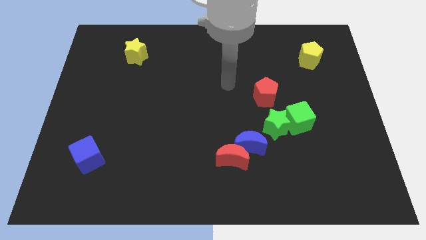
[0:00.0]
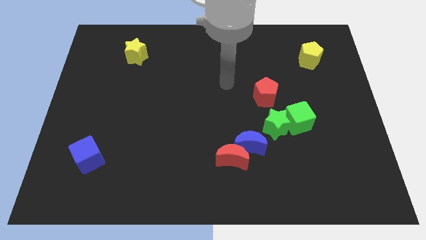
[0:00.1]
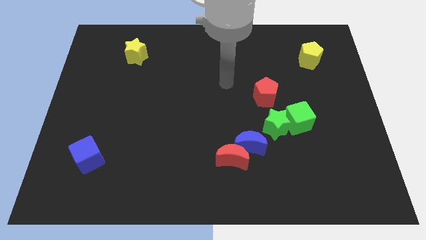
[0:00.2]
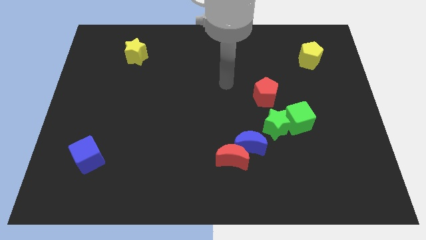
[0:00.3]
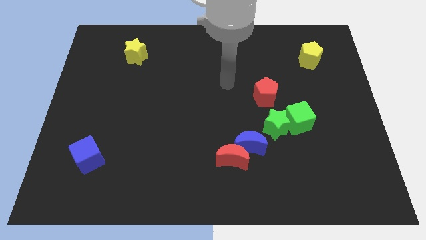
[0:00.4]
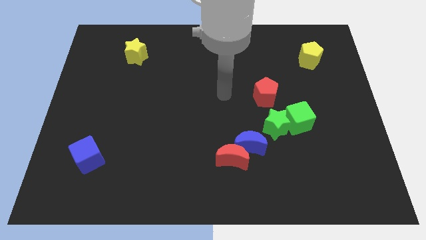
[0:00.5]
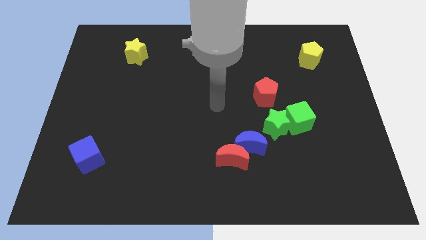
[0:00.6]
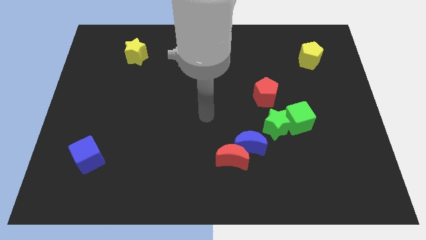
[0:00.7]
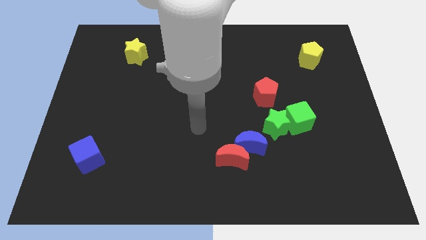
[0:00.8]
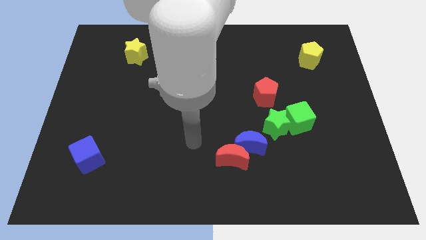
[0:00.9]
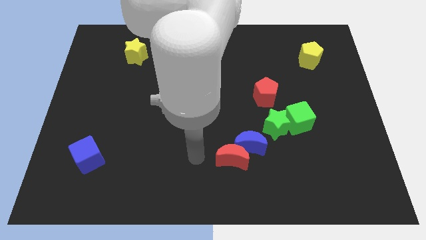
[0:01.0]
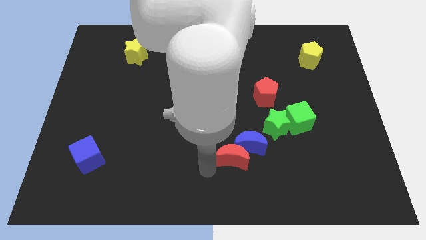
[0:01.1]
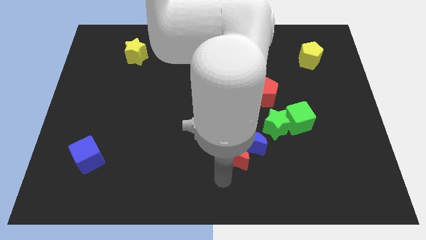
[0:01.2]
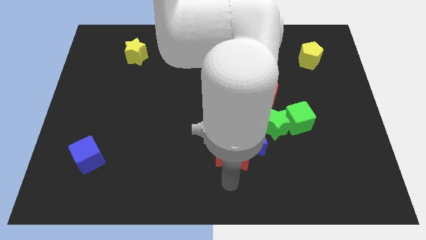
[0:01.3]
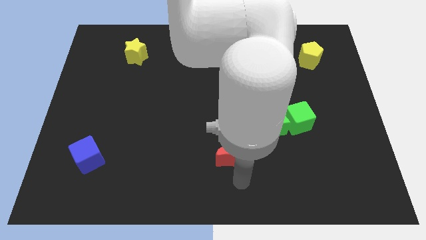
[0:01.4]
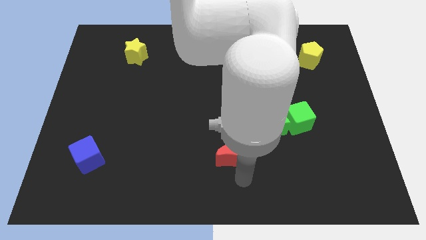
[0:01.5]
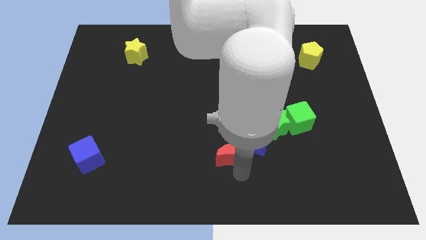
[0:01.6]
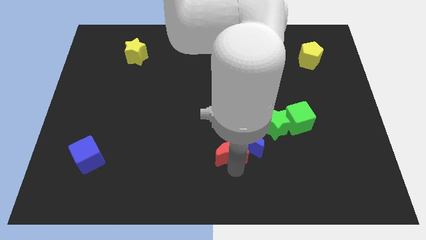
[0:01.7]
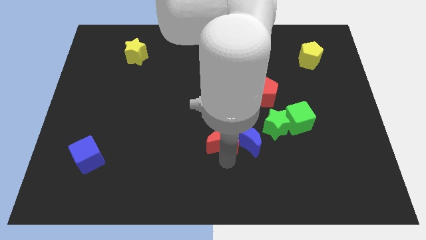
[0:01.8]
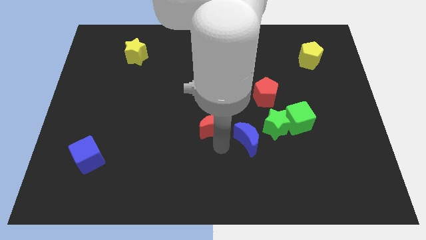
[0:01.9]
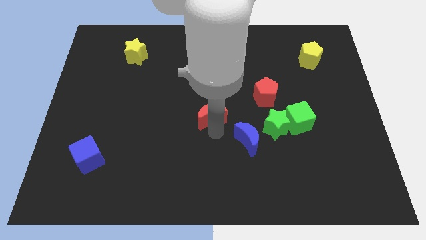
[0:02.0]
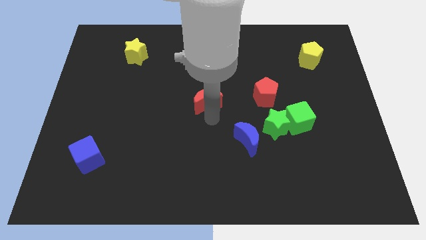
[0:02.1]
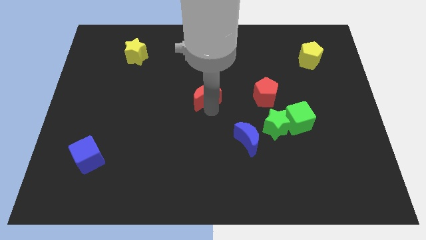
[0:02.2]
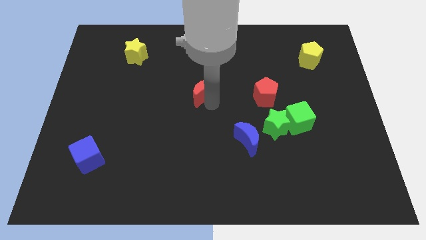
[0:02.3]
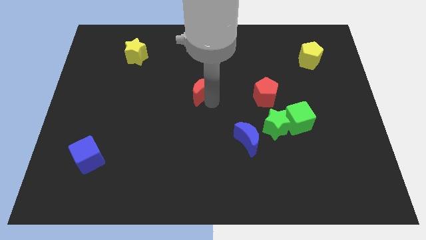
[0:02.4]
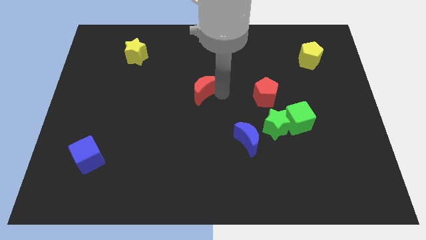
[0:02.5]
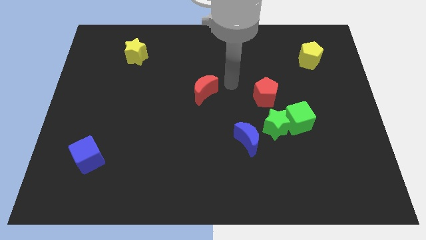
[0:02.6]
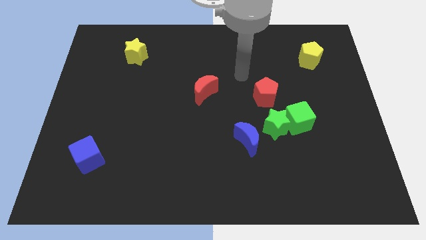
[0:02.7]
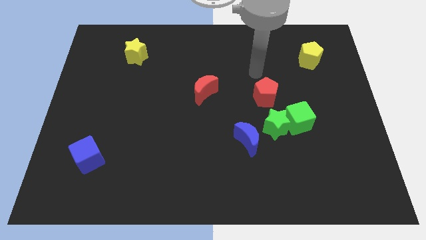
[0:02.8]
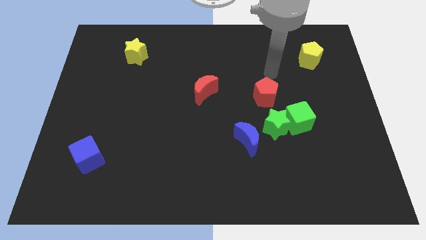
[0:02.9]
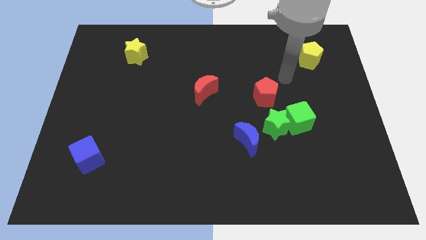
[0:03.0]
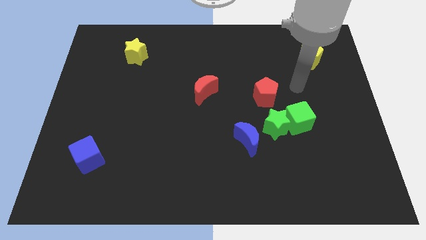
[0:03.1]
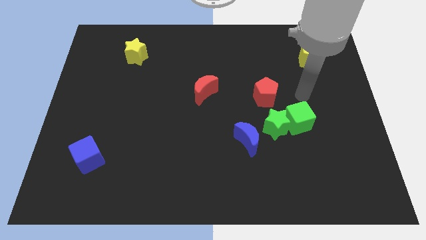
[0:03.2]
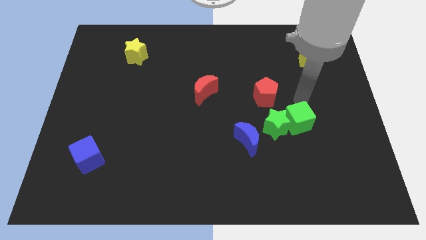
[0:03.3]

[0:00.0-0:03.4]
separate the red moon from the blue moon

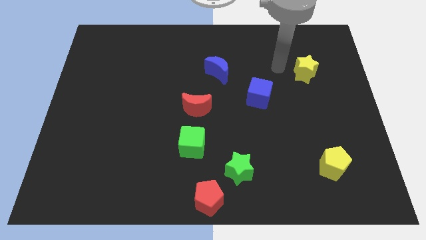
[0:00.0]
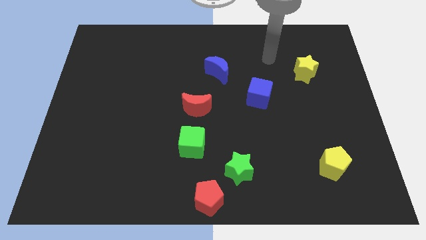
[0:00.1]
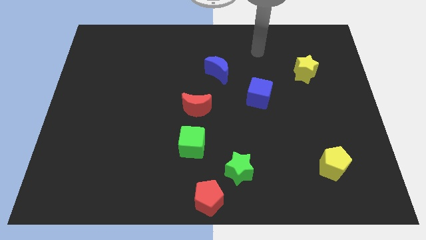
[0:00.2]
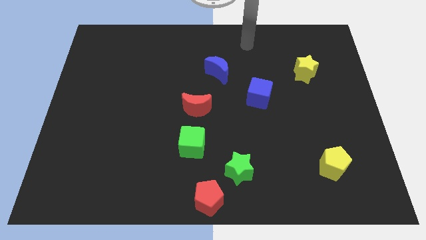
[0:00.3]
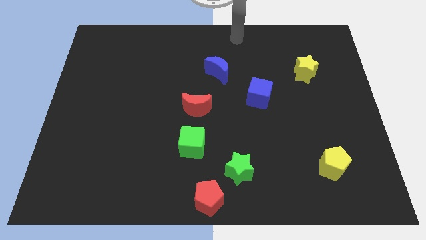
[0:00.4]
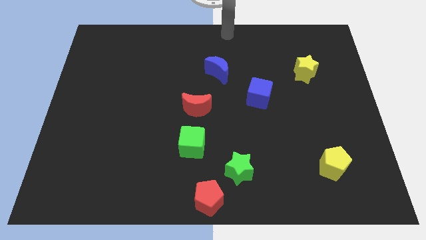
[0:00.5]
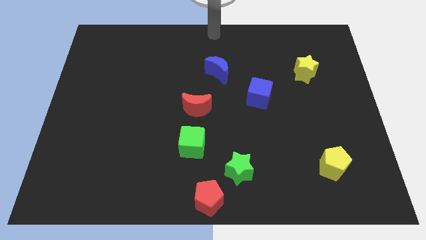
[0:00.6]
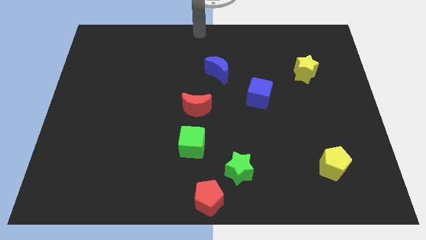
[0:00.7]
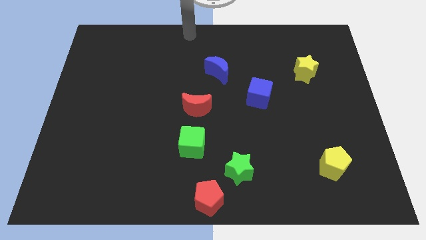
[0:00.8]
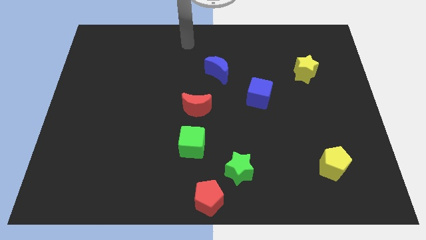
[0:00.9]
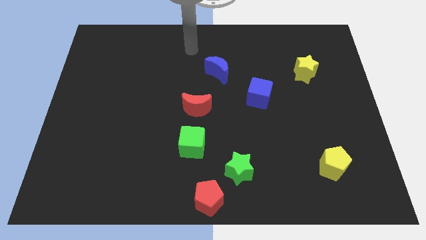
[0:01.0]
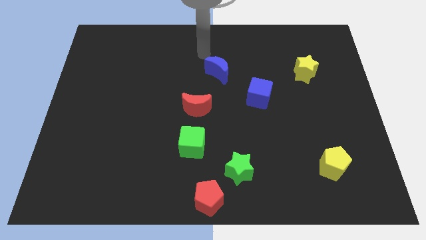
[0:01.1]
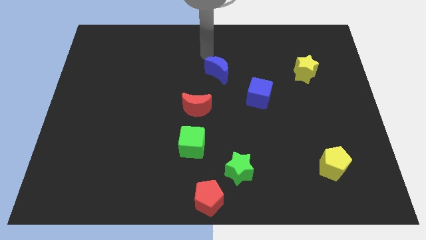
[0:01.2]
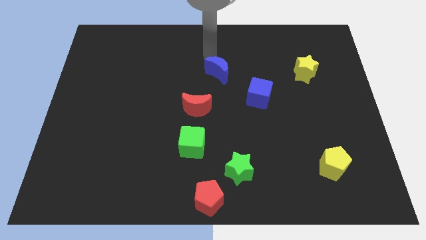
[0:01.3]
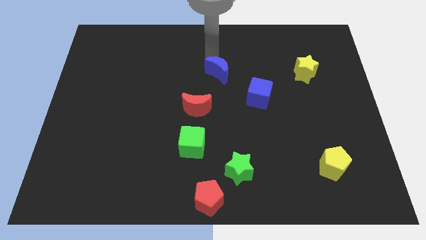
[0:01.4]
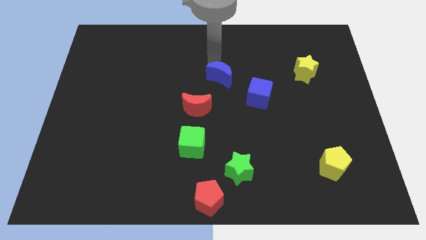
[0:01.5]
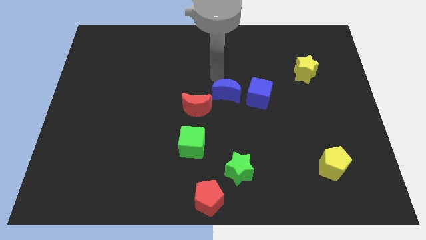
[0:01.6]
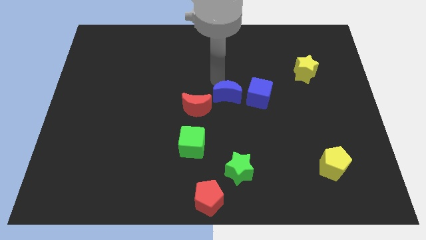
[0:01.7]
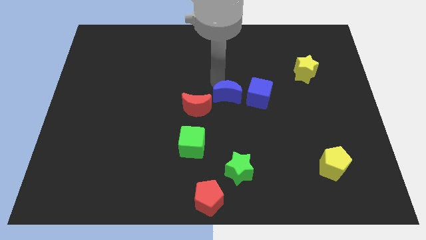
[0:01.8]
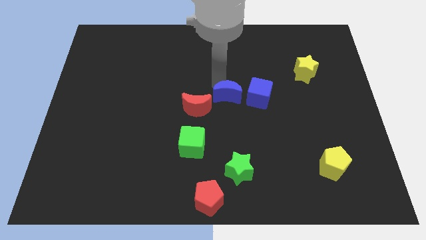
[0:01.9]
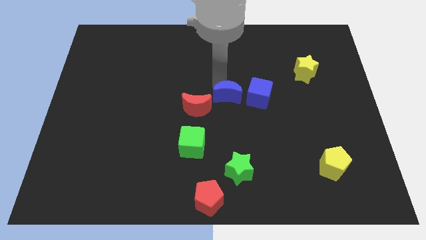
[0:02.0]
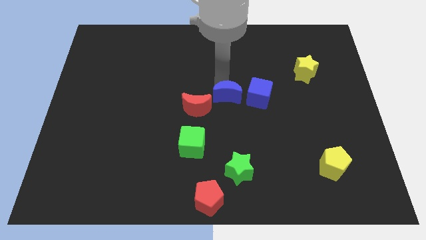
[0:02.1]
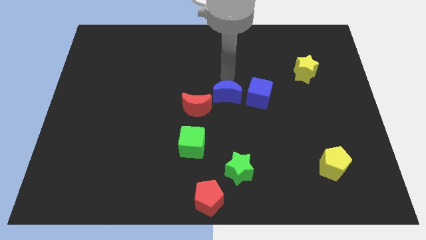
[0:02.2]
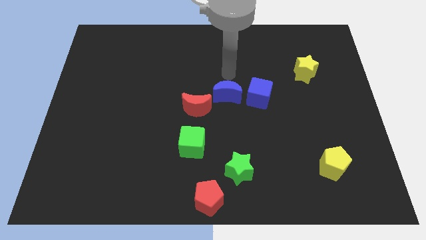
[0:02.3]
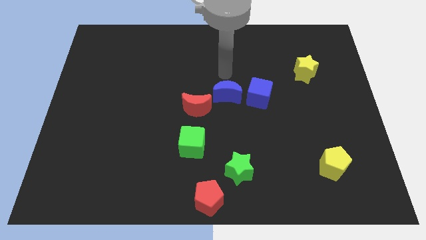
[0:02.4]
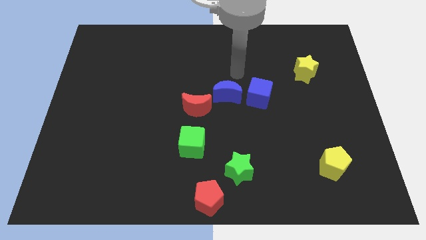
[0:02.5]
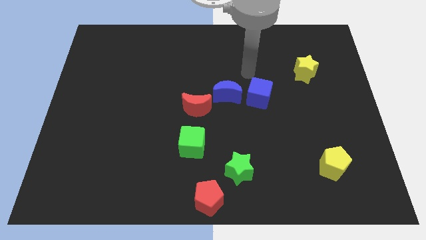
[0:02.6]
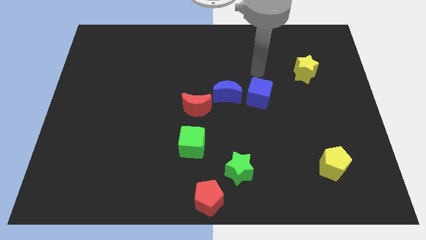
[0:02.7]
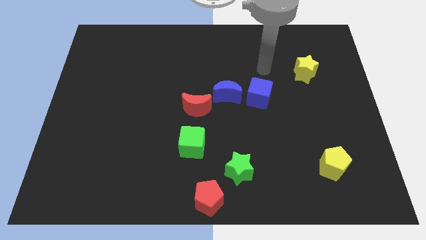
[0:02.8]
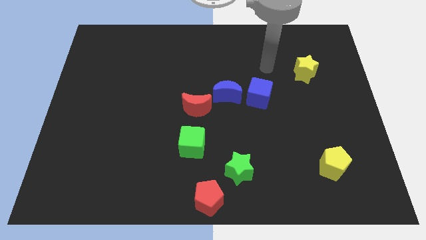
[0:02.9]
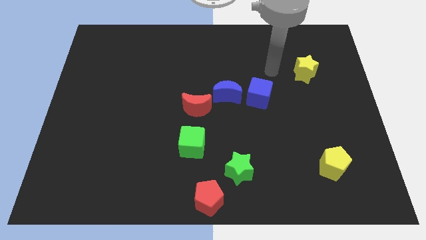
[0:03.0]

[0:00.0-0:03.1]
add blue moon to the left of blue cube

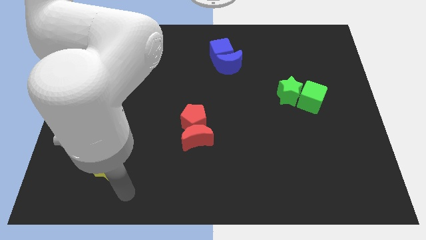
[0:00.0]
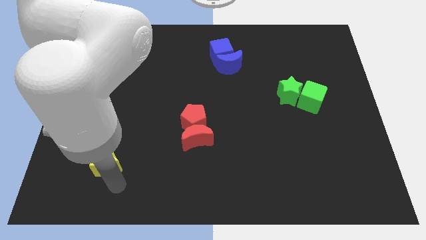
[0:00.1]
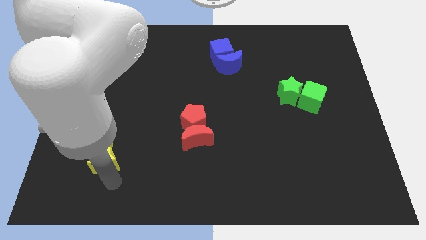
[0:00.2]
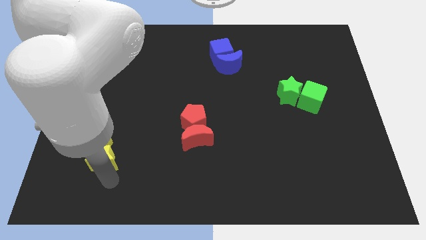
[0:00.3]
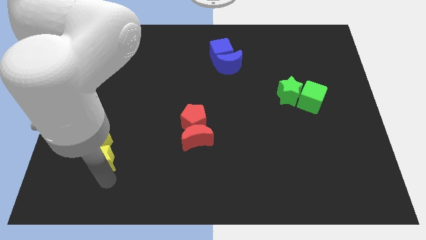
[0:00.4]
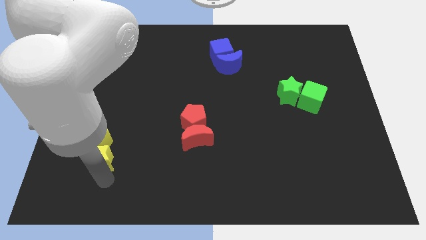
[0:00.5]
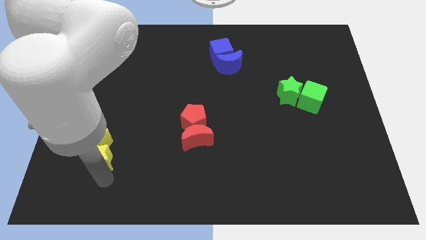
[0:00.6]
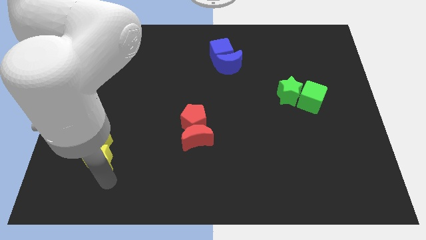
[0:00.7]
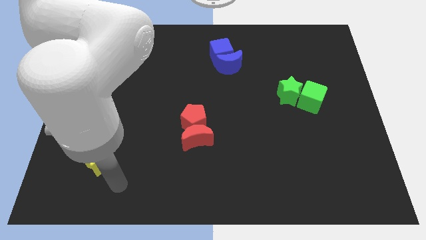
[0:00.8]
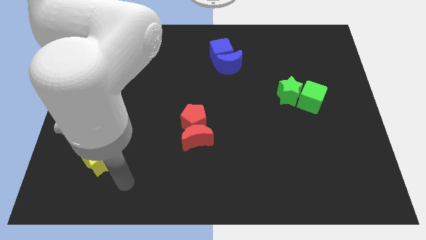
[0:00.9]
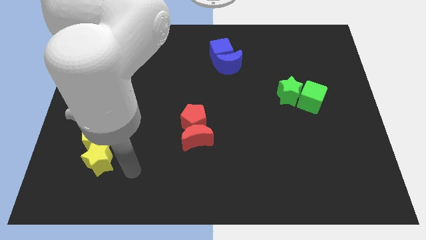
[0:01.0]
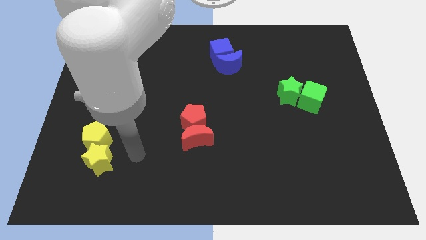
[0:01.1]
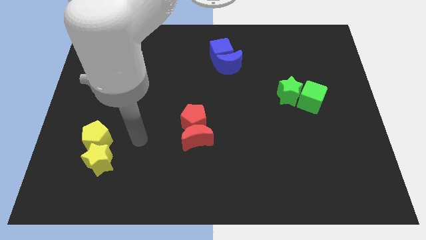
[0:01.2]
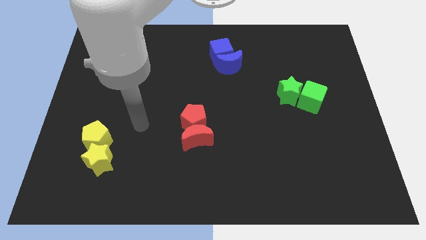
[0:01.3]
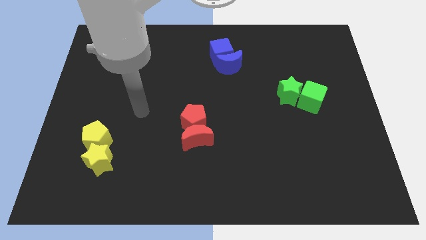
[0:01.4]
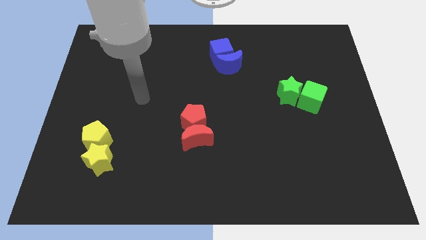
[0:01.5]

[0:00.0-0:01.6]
move the arm towards the top of the board

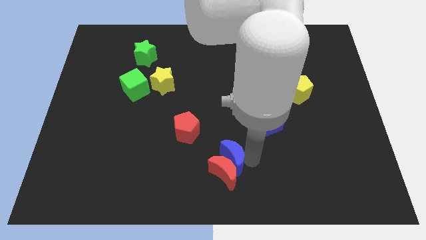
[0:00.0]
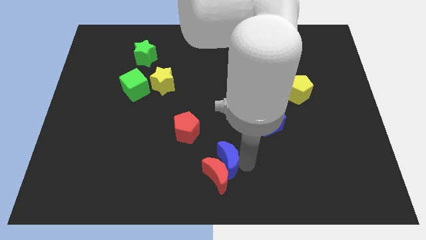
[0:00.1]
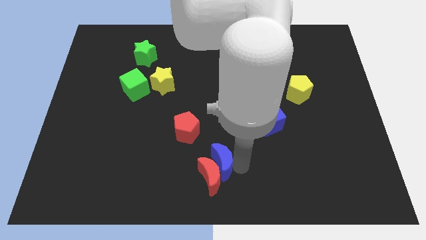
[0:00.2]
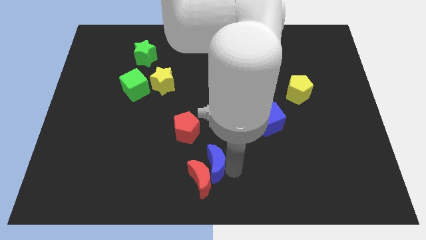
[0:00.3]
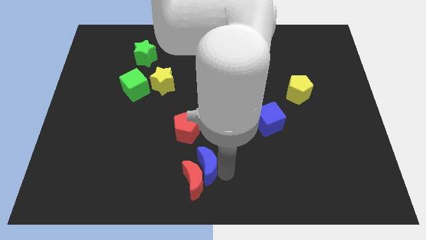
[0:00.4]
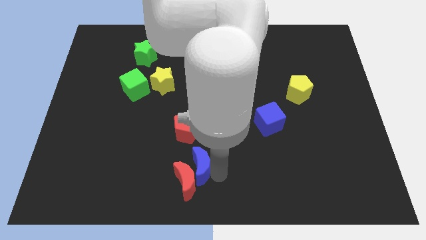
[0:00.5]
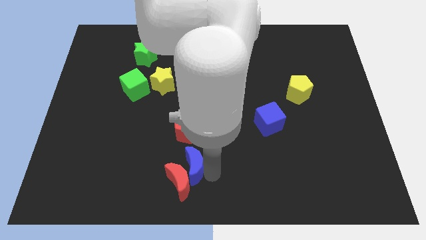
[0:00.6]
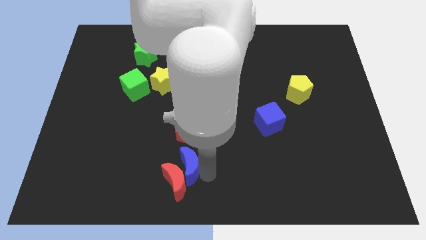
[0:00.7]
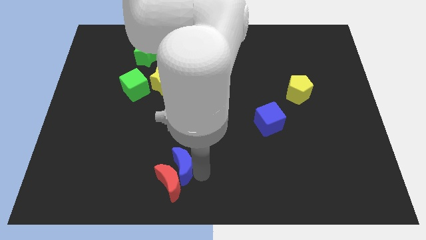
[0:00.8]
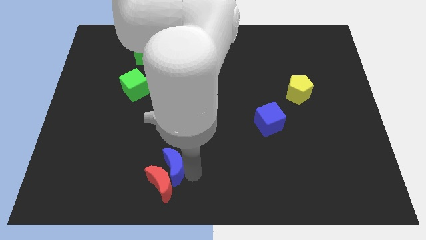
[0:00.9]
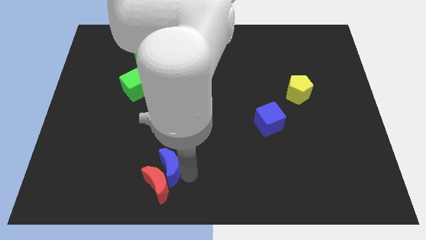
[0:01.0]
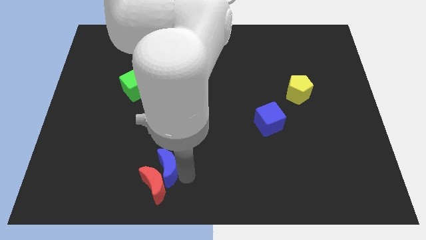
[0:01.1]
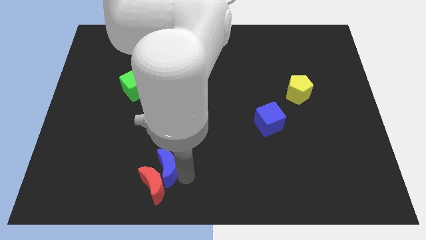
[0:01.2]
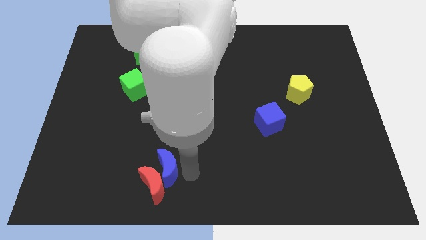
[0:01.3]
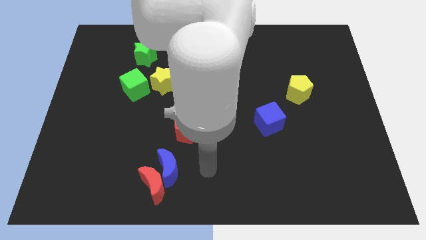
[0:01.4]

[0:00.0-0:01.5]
push blue crescent along with red crescent to the left bottom of the board
